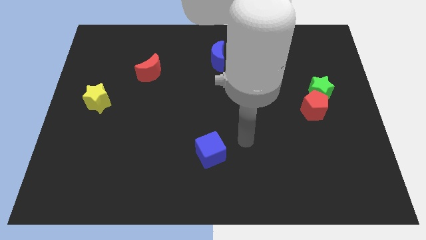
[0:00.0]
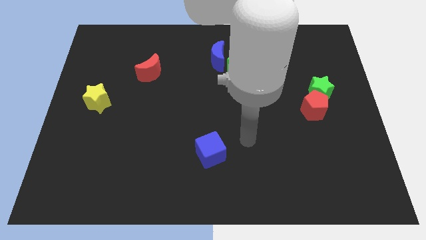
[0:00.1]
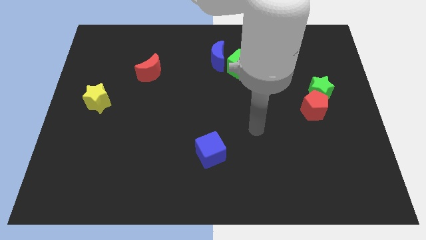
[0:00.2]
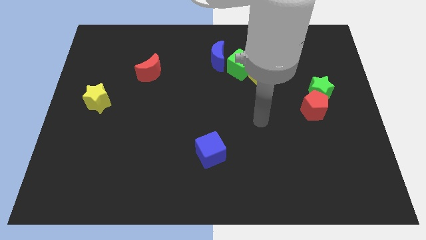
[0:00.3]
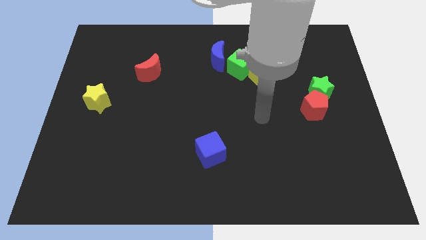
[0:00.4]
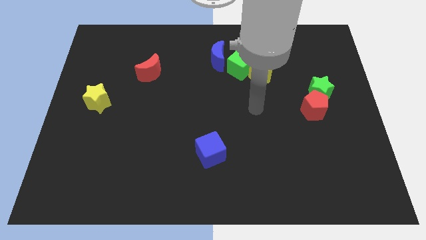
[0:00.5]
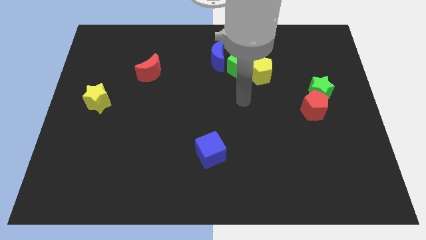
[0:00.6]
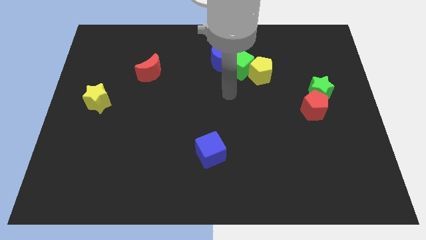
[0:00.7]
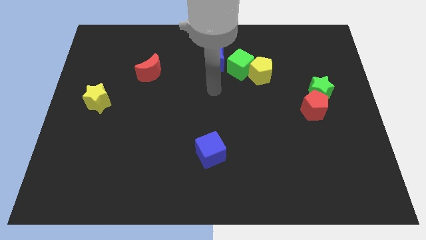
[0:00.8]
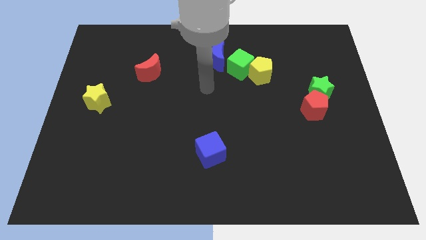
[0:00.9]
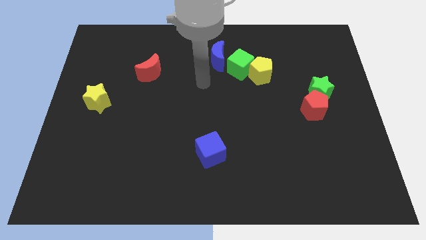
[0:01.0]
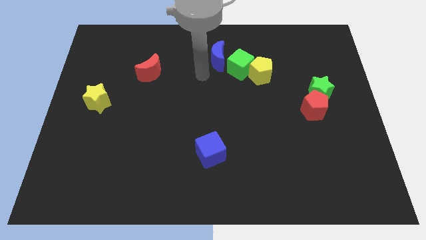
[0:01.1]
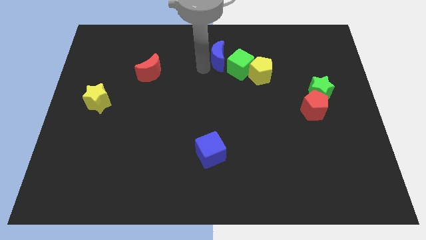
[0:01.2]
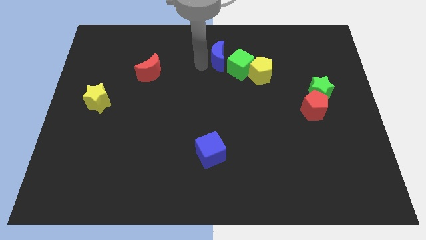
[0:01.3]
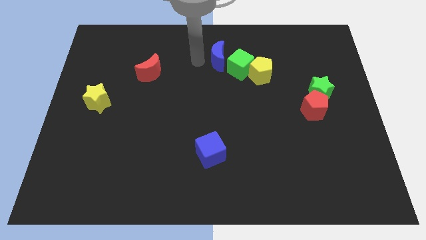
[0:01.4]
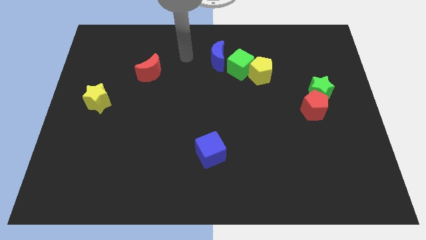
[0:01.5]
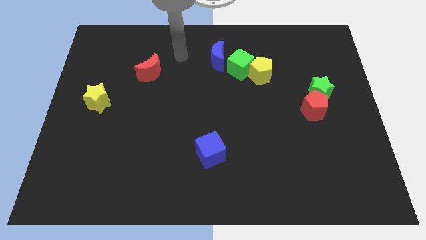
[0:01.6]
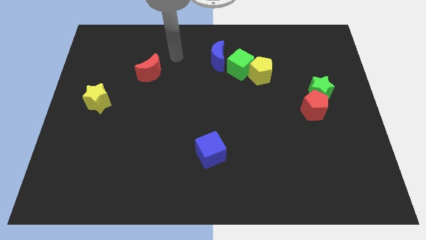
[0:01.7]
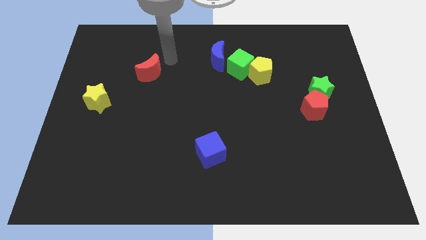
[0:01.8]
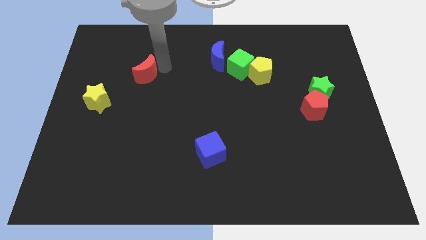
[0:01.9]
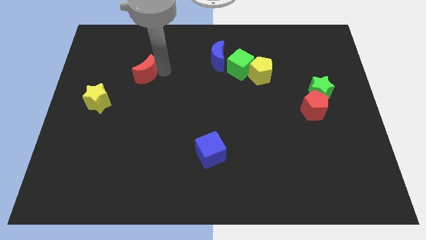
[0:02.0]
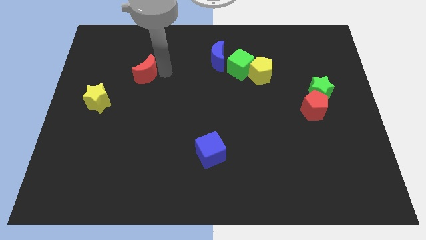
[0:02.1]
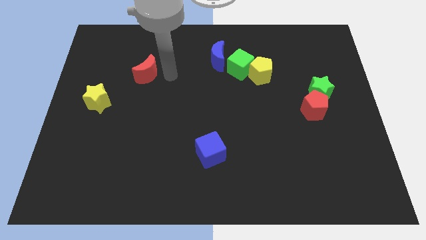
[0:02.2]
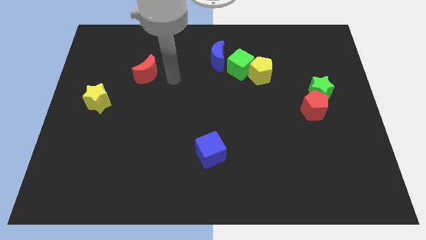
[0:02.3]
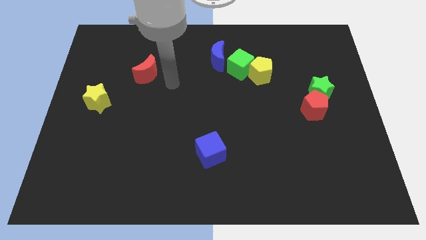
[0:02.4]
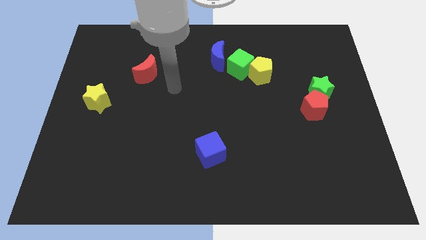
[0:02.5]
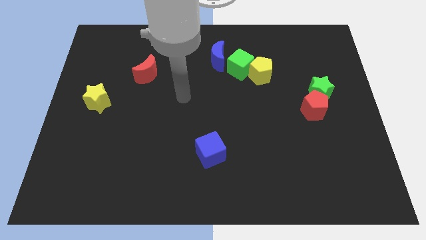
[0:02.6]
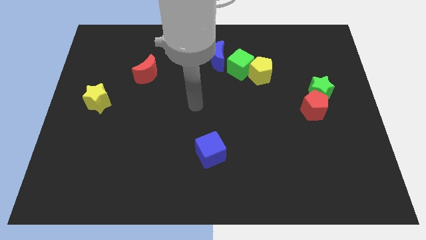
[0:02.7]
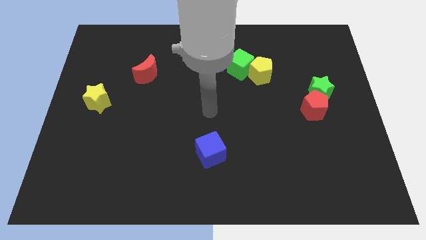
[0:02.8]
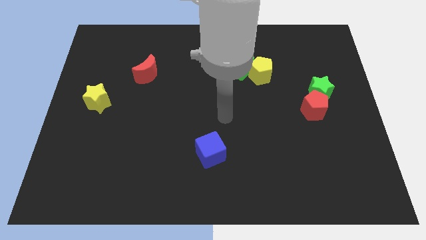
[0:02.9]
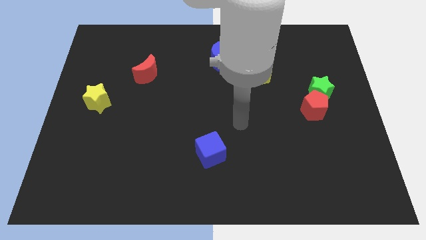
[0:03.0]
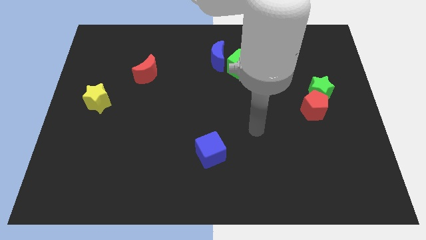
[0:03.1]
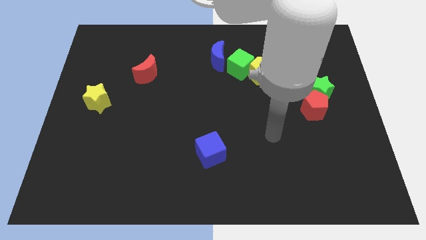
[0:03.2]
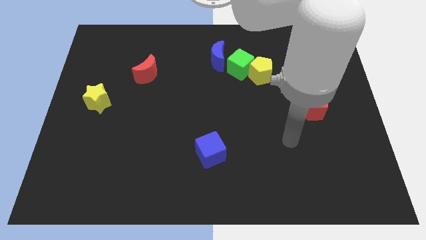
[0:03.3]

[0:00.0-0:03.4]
tap the top side of the red crescent and go away

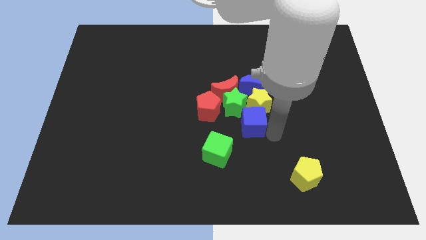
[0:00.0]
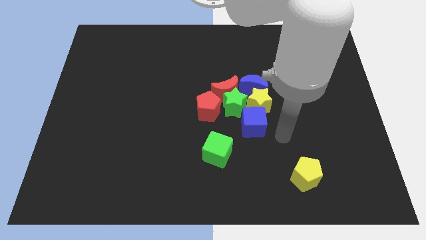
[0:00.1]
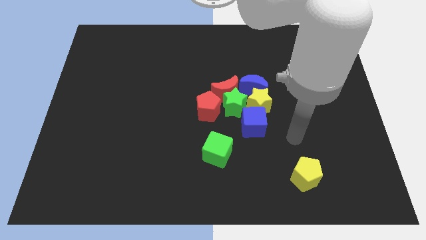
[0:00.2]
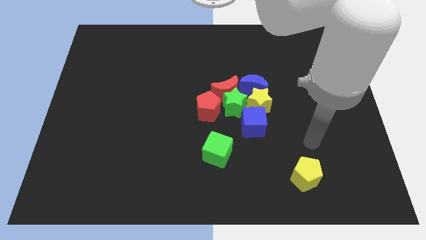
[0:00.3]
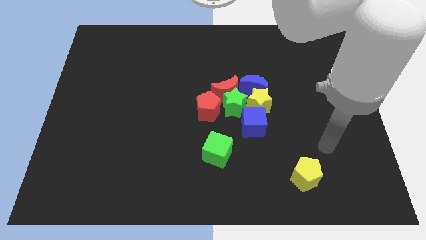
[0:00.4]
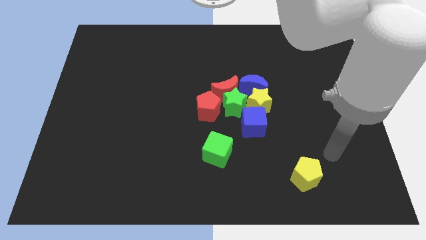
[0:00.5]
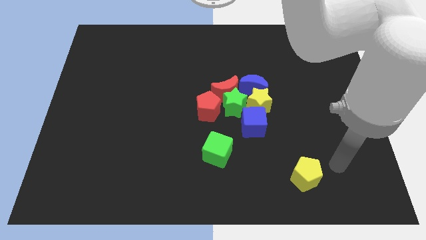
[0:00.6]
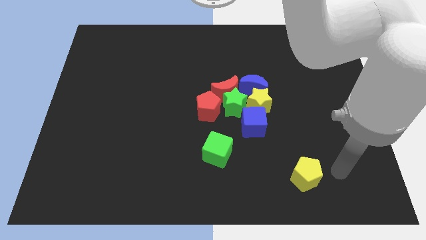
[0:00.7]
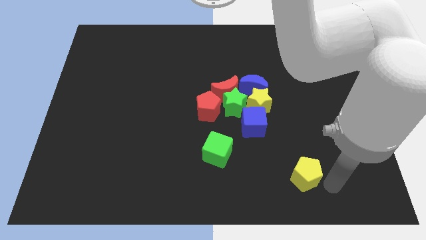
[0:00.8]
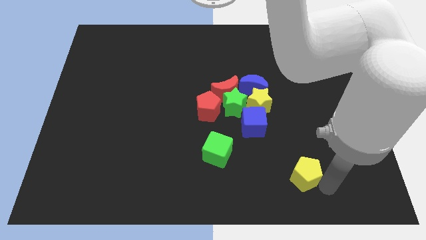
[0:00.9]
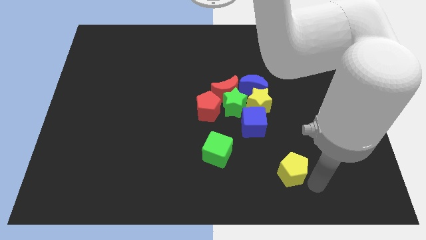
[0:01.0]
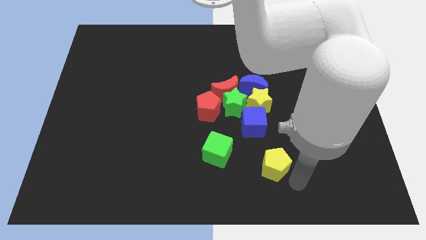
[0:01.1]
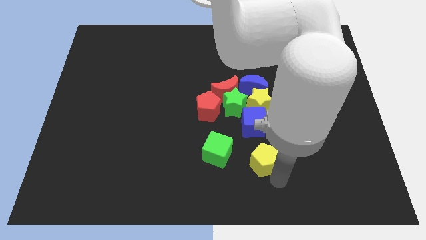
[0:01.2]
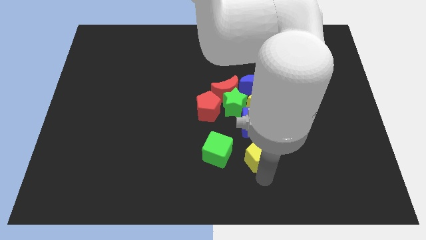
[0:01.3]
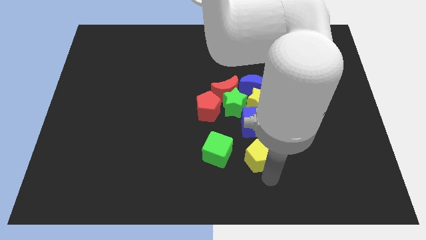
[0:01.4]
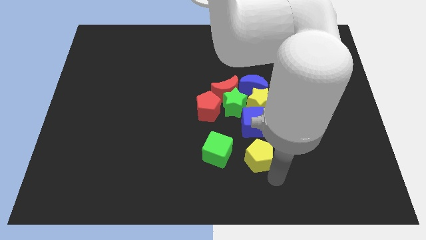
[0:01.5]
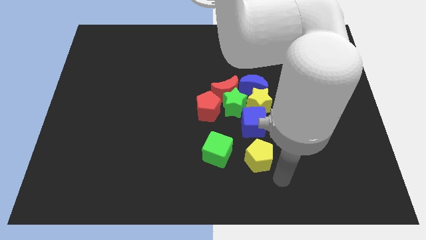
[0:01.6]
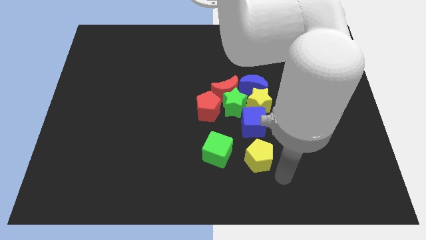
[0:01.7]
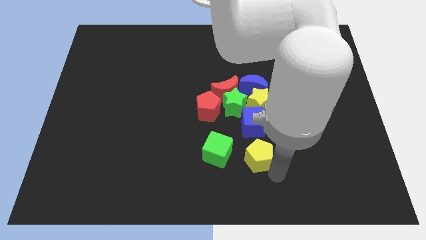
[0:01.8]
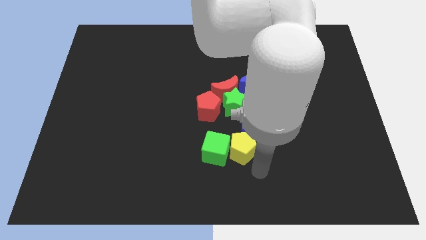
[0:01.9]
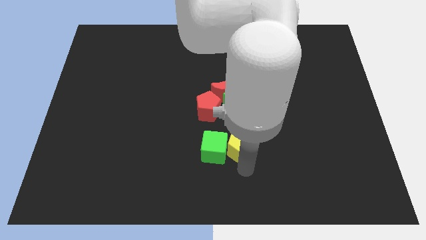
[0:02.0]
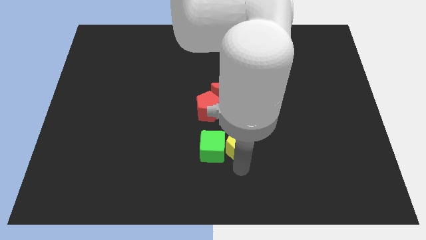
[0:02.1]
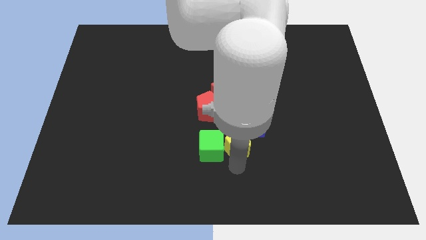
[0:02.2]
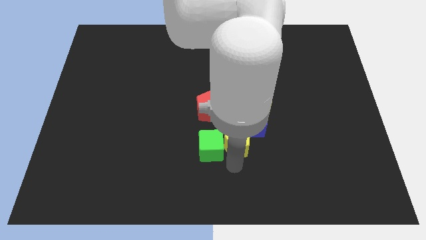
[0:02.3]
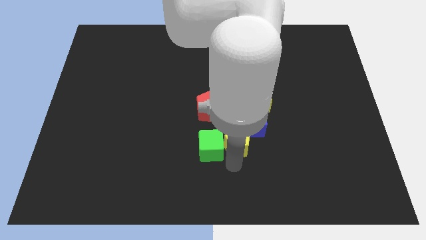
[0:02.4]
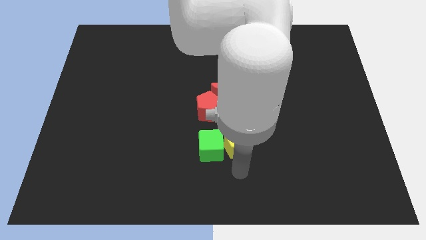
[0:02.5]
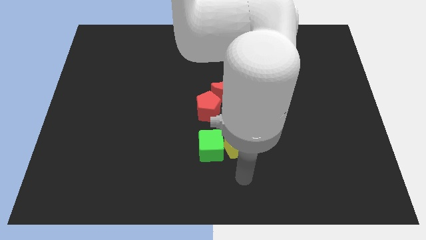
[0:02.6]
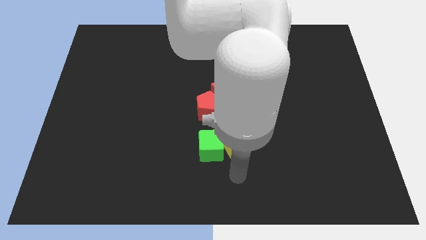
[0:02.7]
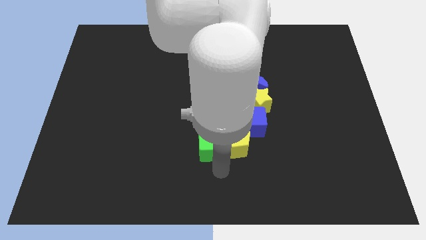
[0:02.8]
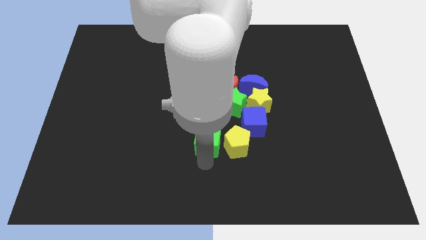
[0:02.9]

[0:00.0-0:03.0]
move the yellow pentagon to the right side of the green cube

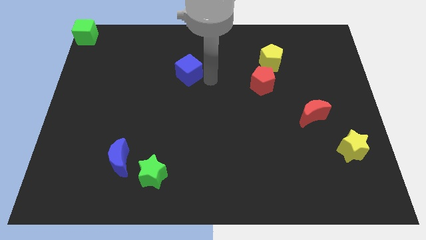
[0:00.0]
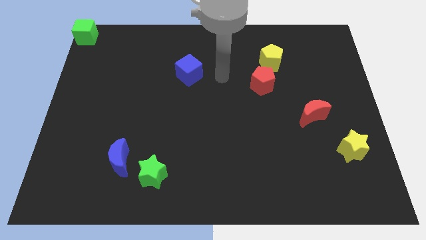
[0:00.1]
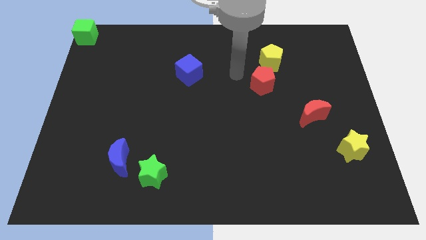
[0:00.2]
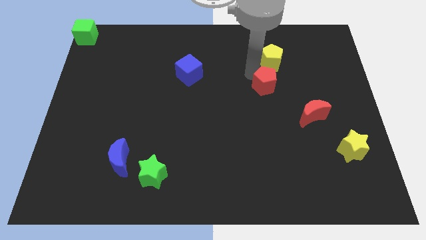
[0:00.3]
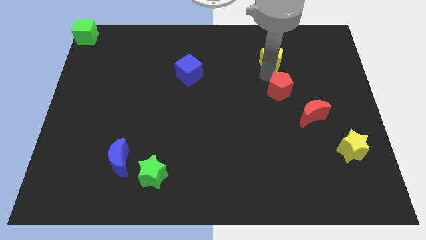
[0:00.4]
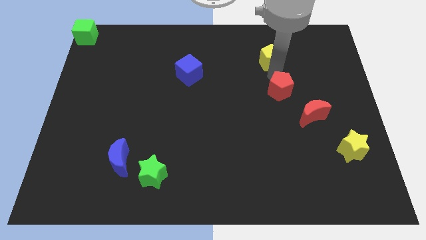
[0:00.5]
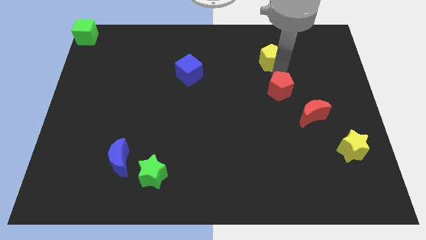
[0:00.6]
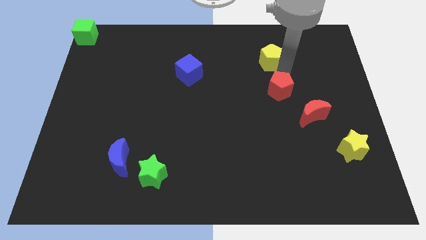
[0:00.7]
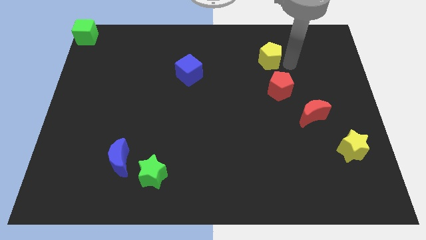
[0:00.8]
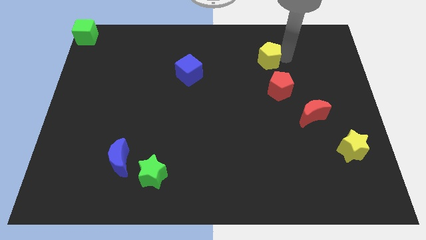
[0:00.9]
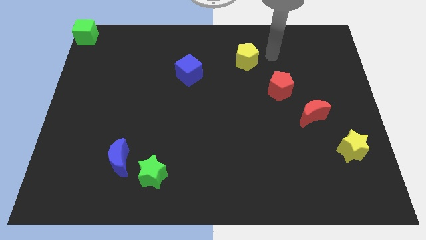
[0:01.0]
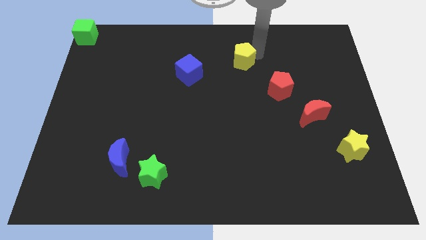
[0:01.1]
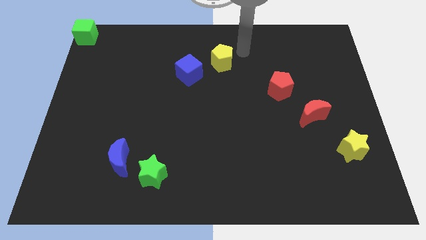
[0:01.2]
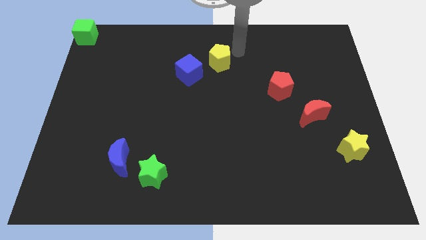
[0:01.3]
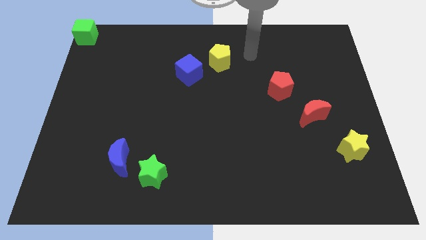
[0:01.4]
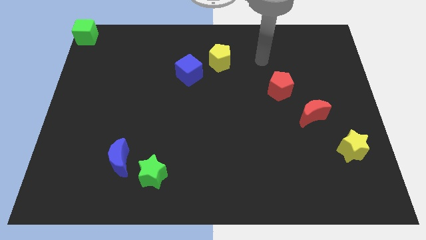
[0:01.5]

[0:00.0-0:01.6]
move the yellow pentagon towards the blue cube

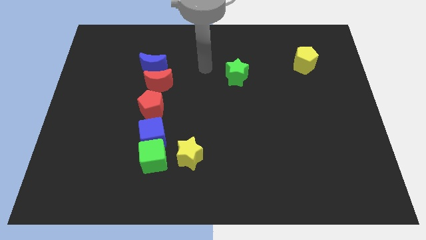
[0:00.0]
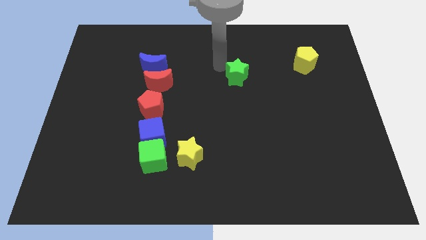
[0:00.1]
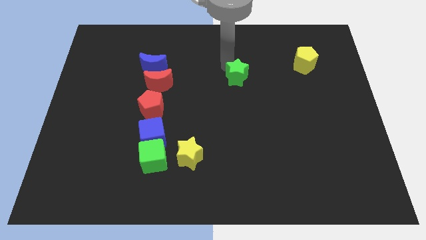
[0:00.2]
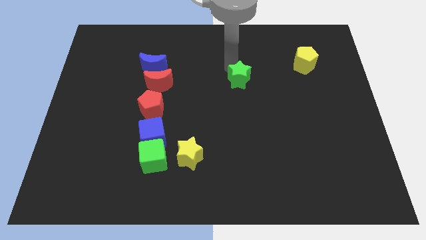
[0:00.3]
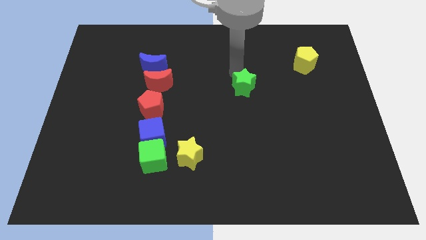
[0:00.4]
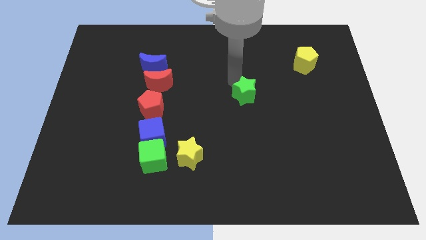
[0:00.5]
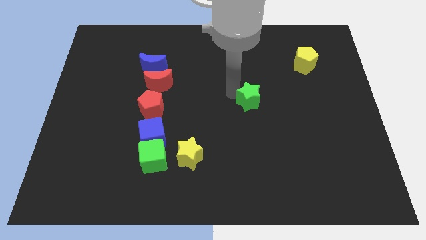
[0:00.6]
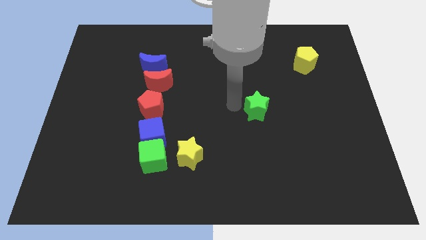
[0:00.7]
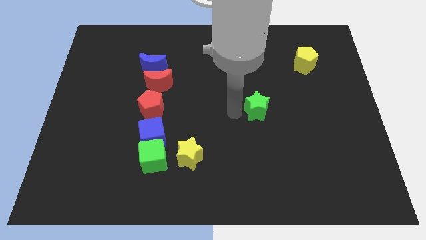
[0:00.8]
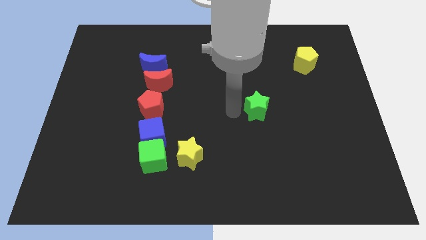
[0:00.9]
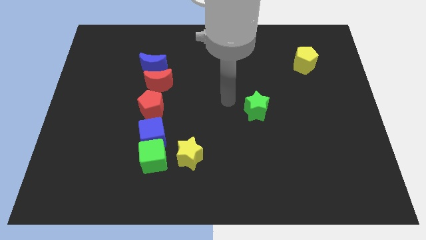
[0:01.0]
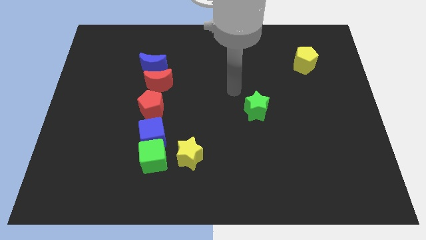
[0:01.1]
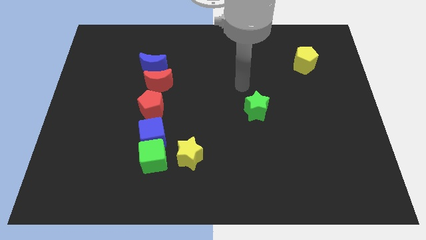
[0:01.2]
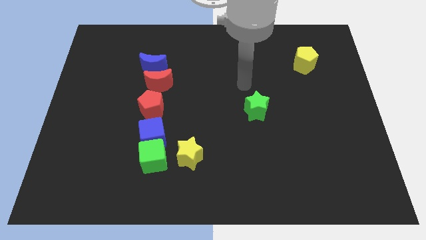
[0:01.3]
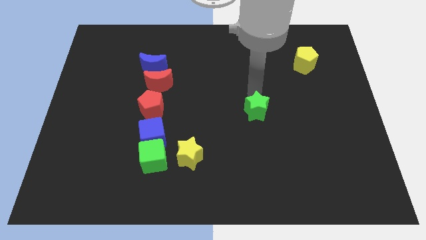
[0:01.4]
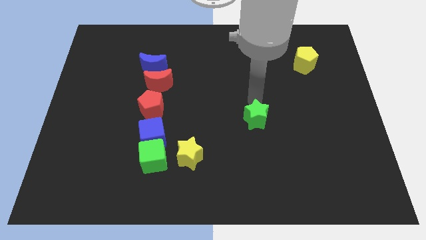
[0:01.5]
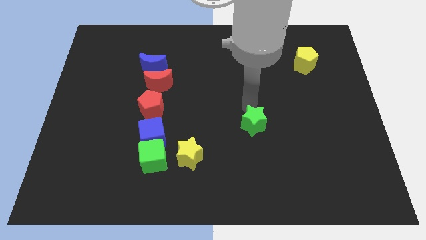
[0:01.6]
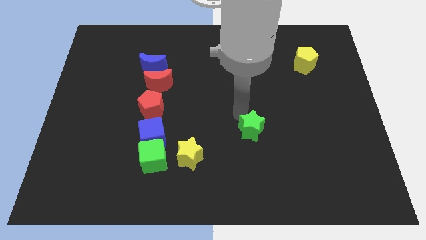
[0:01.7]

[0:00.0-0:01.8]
move the green star to the right of the blue cube
